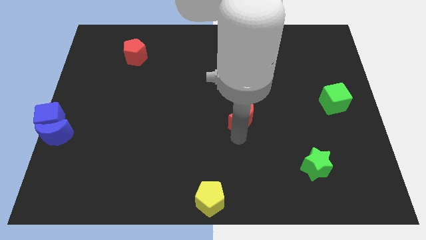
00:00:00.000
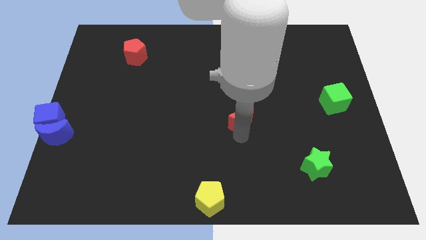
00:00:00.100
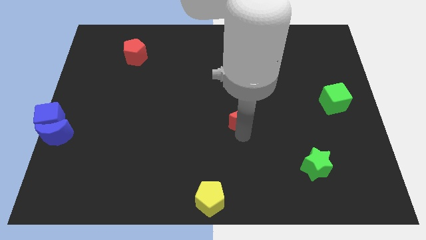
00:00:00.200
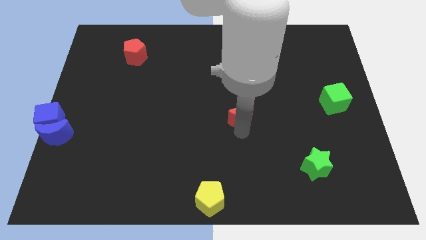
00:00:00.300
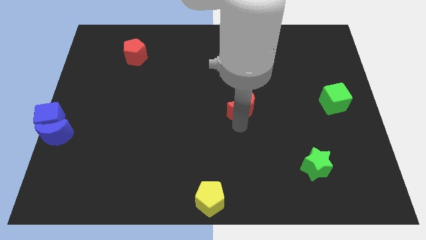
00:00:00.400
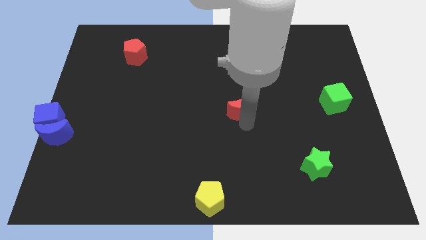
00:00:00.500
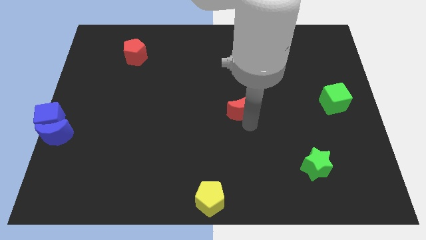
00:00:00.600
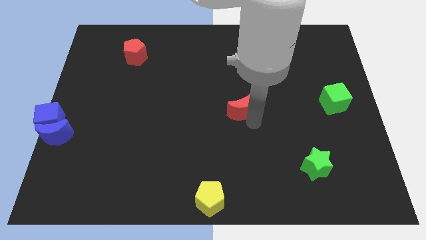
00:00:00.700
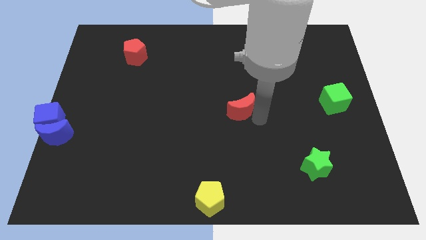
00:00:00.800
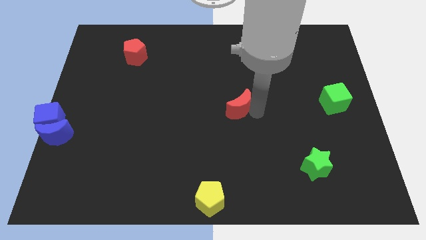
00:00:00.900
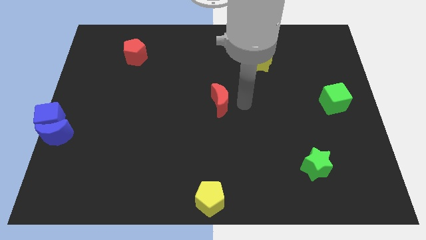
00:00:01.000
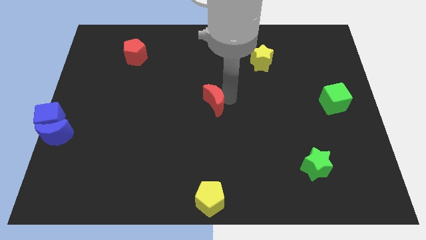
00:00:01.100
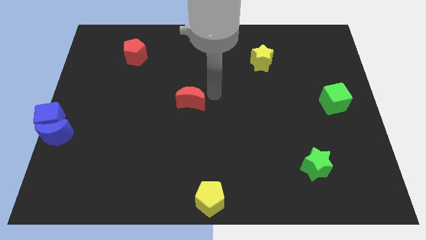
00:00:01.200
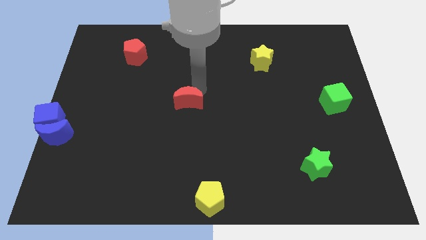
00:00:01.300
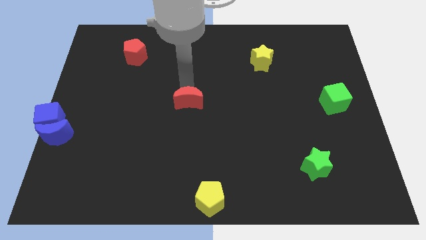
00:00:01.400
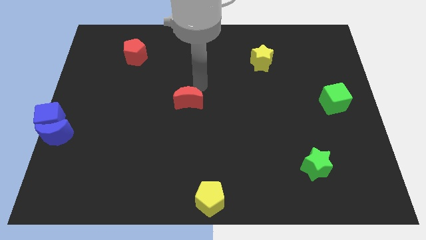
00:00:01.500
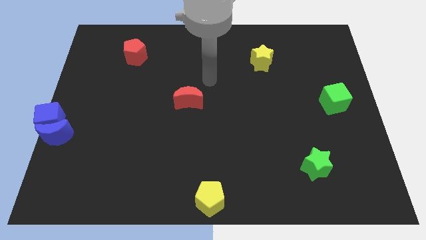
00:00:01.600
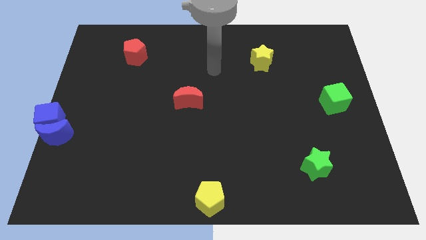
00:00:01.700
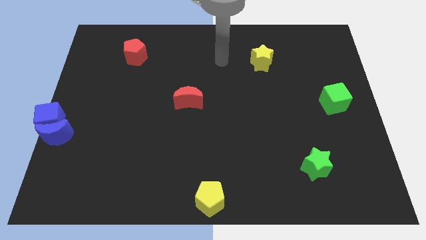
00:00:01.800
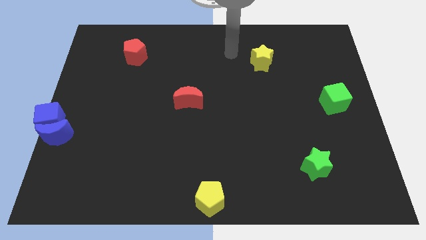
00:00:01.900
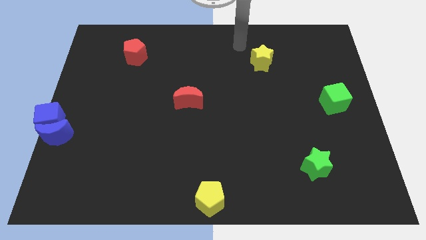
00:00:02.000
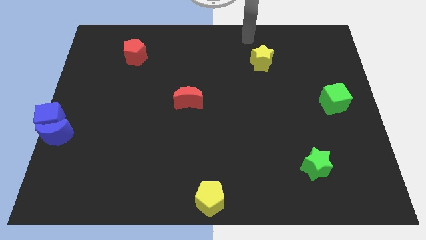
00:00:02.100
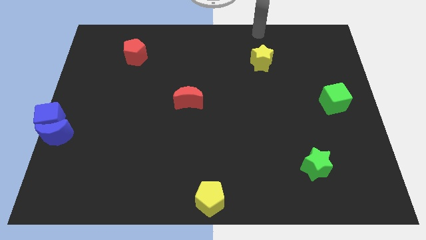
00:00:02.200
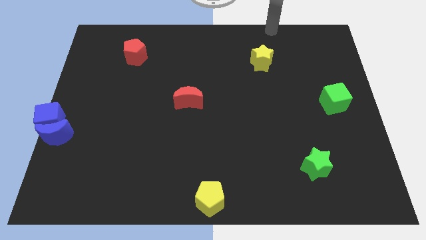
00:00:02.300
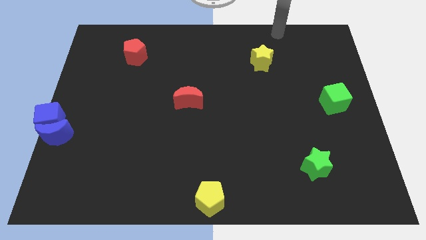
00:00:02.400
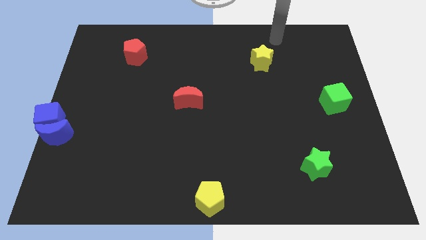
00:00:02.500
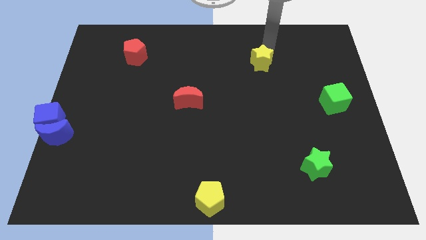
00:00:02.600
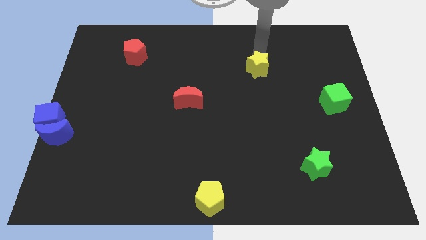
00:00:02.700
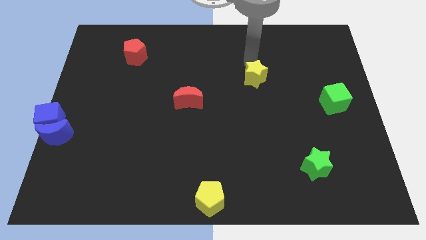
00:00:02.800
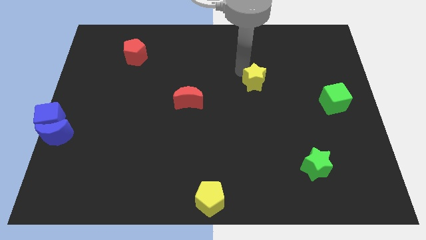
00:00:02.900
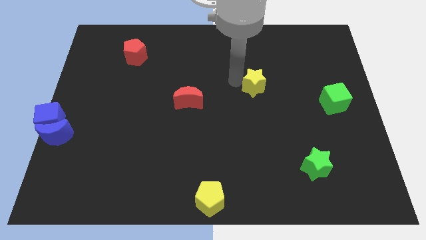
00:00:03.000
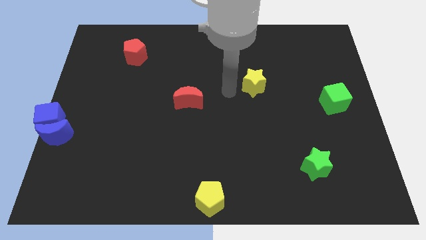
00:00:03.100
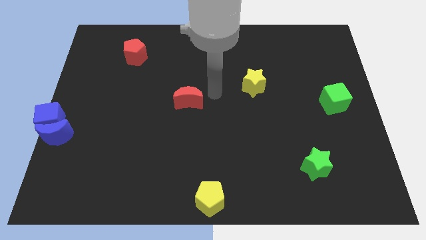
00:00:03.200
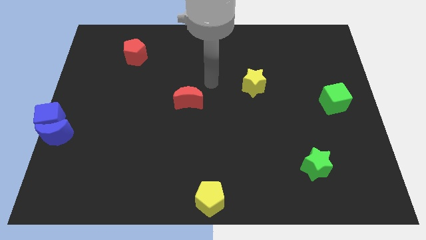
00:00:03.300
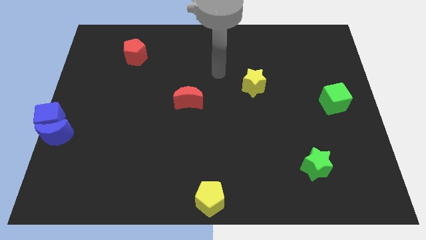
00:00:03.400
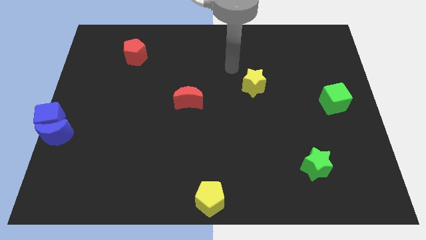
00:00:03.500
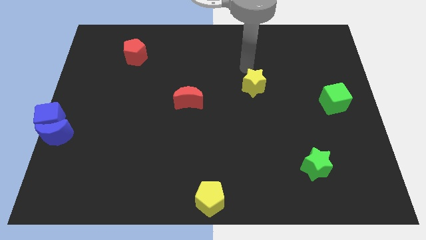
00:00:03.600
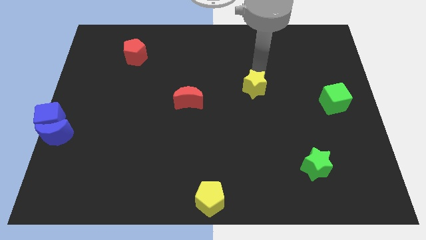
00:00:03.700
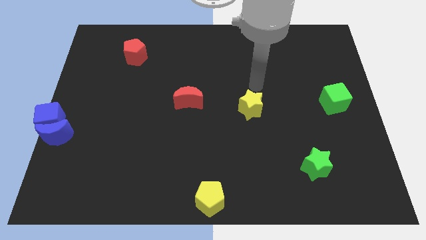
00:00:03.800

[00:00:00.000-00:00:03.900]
push the yellow star beside the green cube

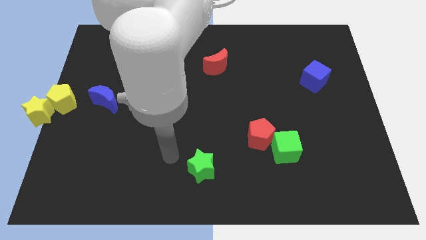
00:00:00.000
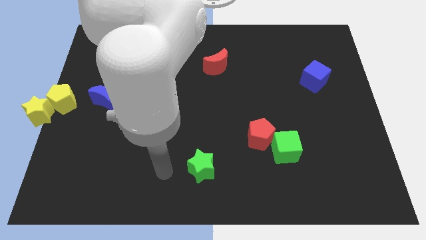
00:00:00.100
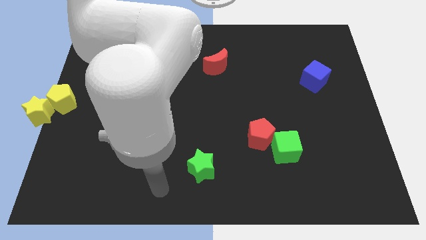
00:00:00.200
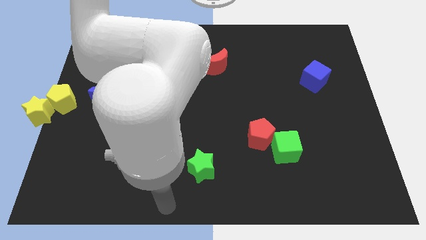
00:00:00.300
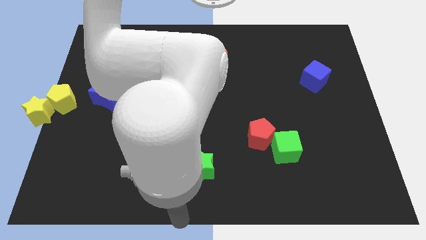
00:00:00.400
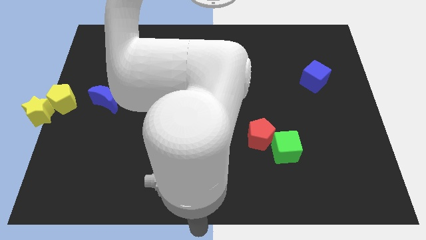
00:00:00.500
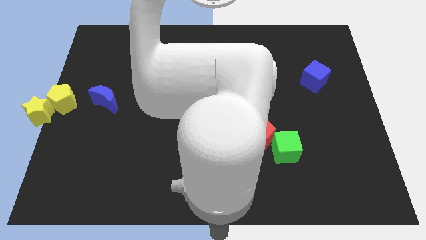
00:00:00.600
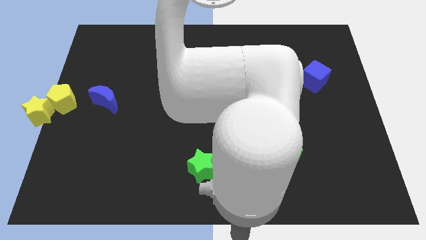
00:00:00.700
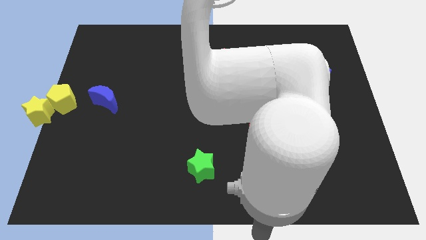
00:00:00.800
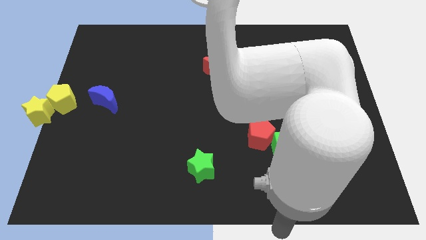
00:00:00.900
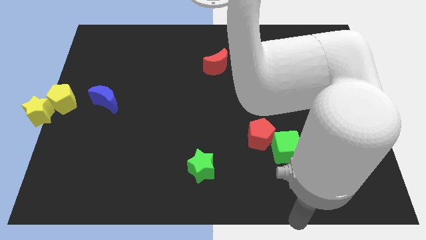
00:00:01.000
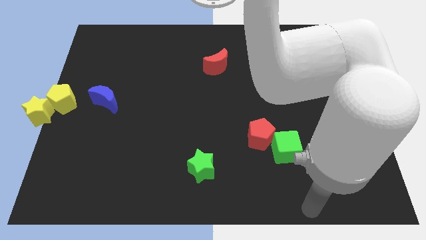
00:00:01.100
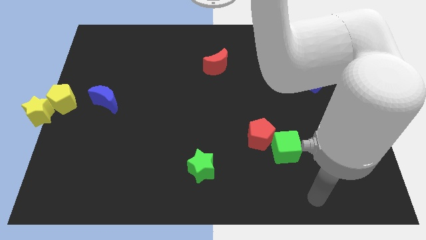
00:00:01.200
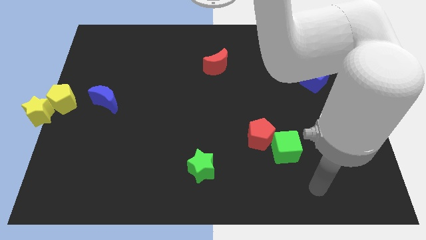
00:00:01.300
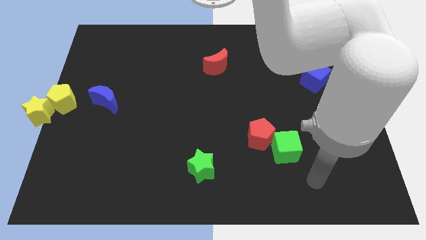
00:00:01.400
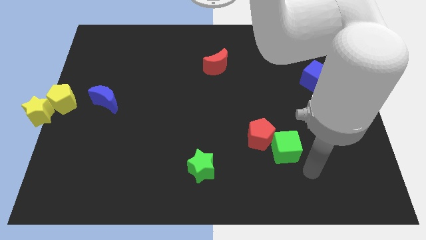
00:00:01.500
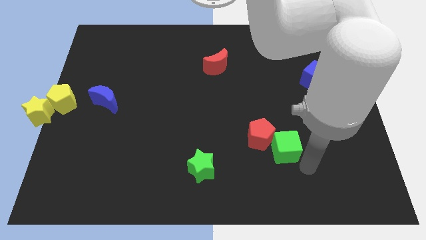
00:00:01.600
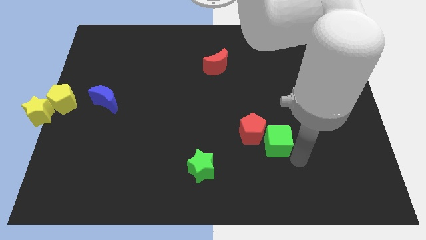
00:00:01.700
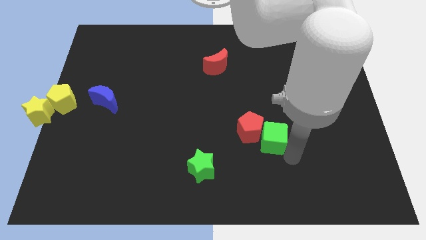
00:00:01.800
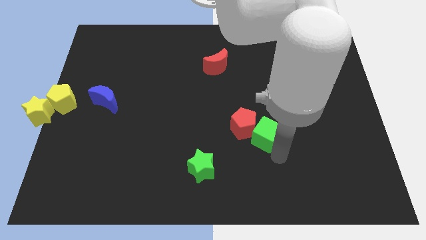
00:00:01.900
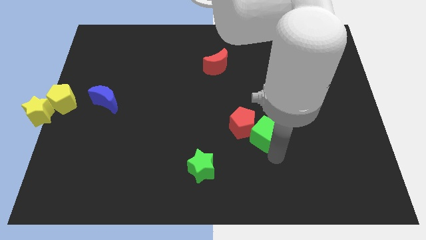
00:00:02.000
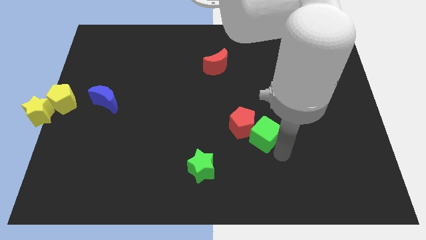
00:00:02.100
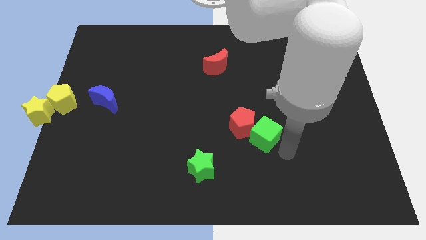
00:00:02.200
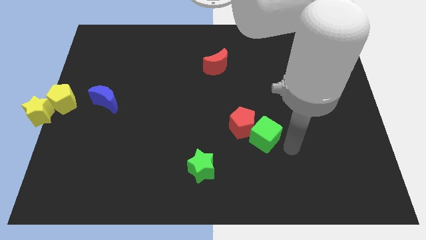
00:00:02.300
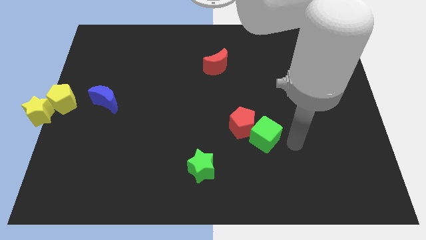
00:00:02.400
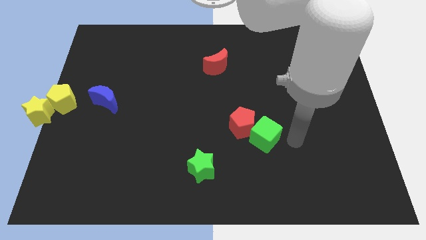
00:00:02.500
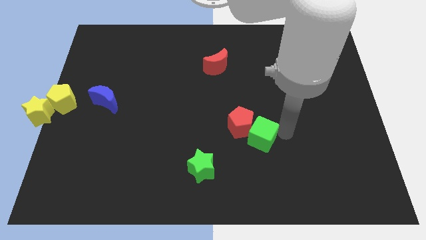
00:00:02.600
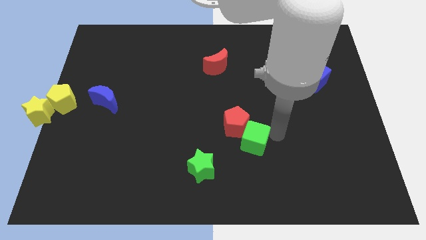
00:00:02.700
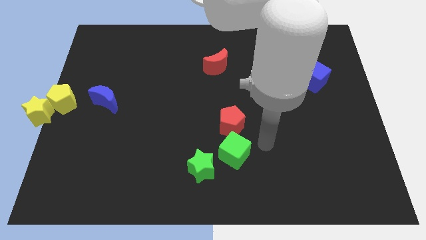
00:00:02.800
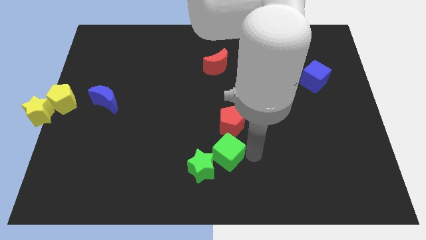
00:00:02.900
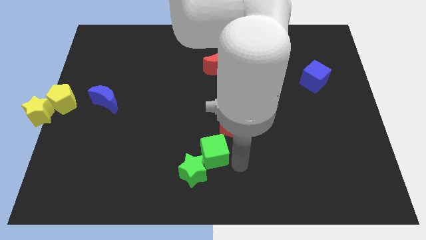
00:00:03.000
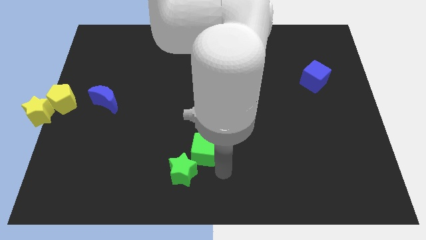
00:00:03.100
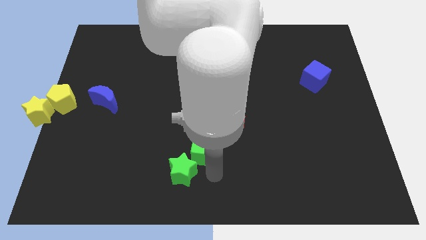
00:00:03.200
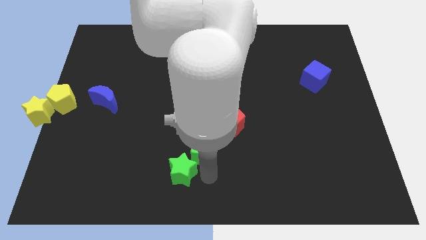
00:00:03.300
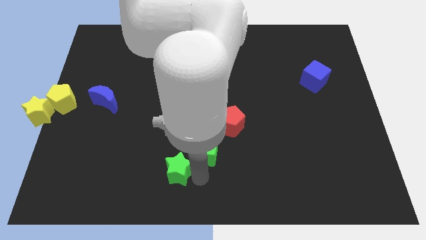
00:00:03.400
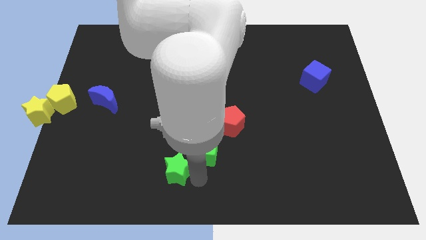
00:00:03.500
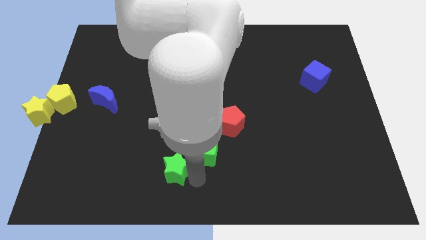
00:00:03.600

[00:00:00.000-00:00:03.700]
push green cube diagonally to the green star

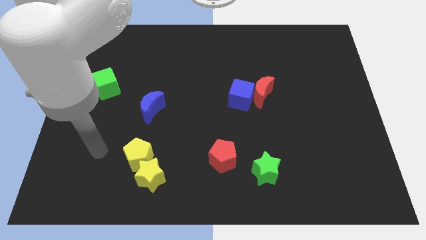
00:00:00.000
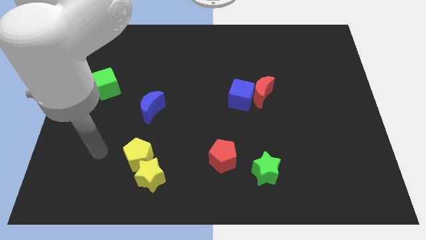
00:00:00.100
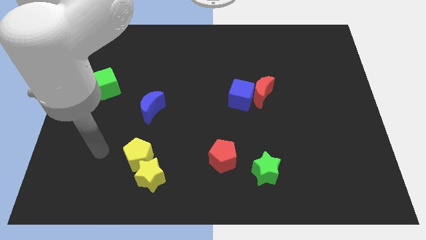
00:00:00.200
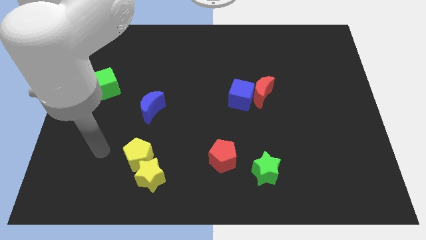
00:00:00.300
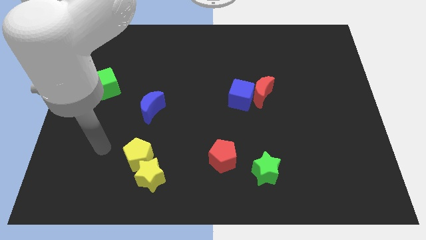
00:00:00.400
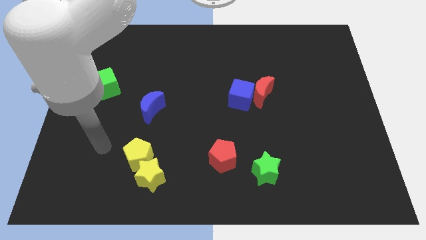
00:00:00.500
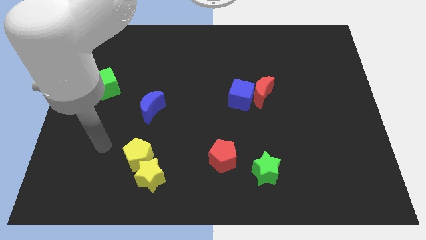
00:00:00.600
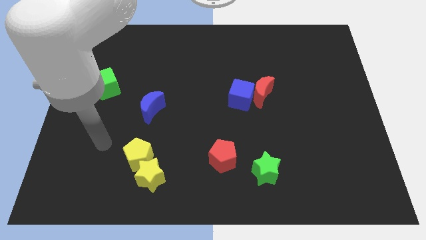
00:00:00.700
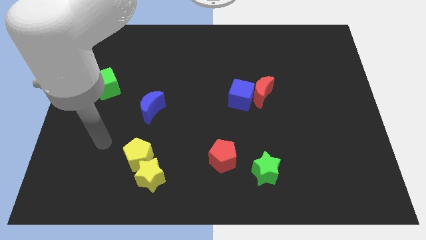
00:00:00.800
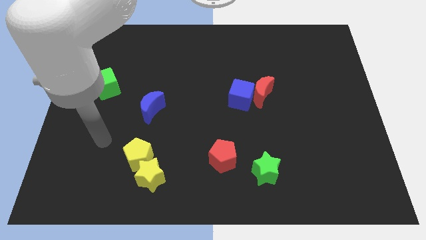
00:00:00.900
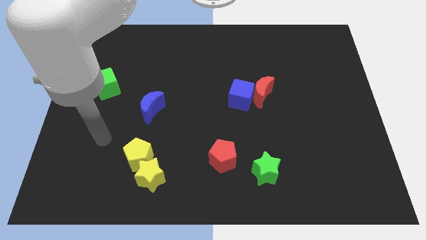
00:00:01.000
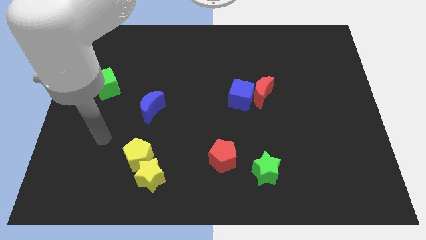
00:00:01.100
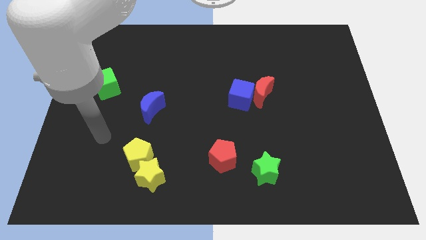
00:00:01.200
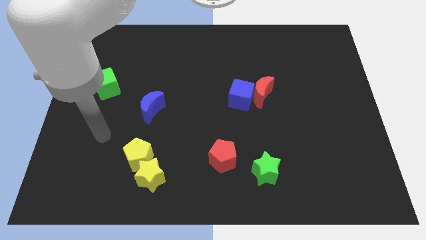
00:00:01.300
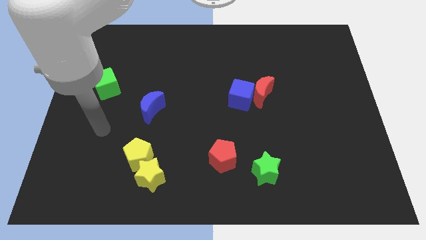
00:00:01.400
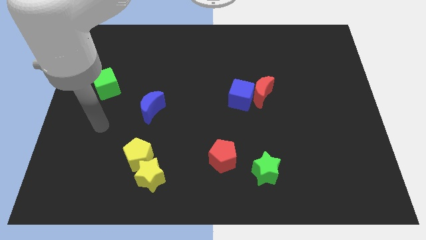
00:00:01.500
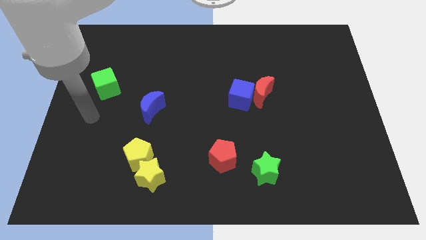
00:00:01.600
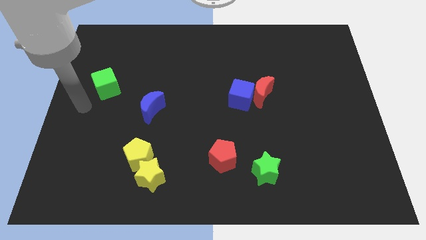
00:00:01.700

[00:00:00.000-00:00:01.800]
move your arm towards the left side of the green cube
